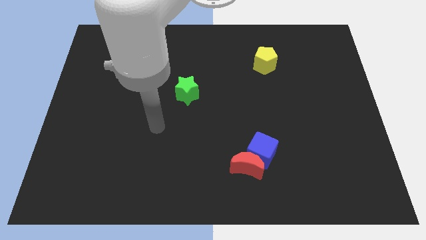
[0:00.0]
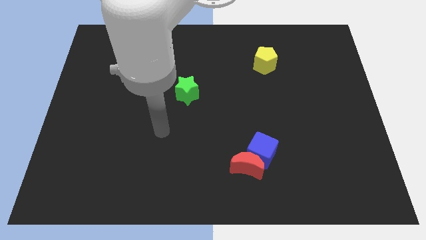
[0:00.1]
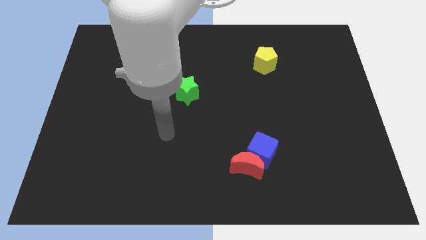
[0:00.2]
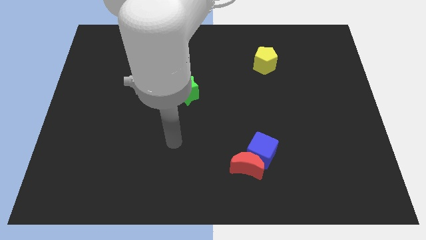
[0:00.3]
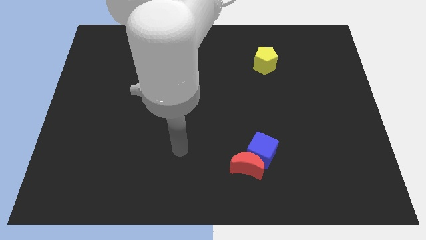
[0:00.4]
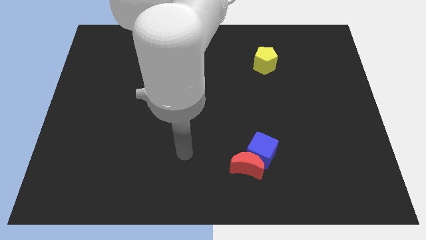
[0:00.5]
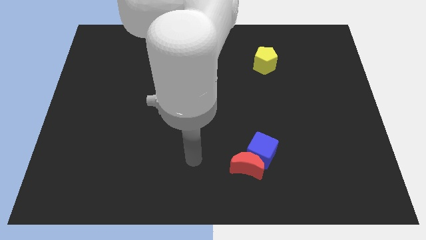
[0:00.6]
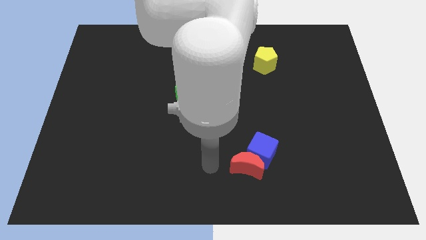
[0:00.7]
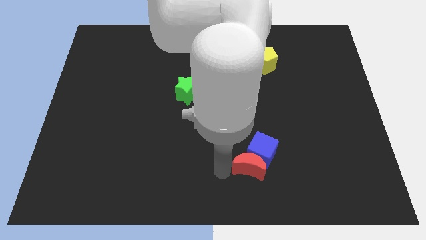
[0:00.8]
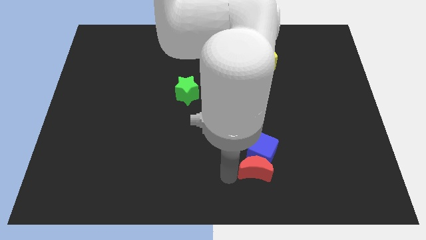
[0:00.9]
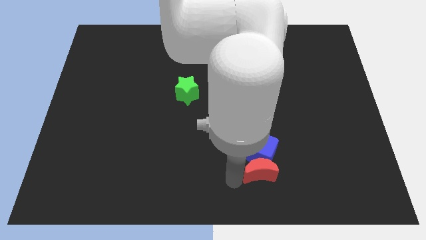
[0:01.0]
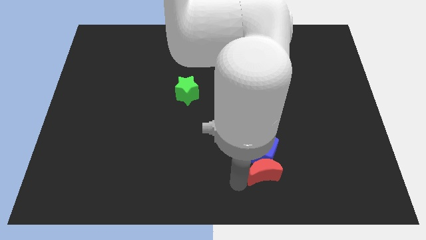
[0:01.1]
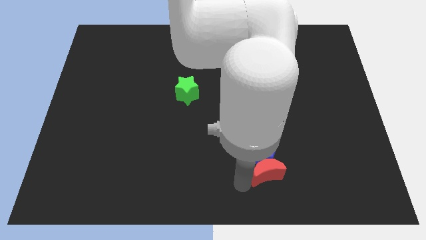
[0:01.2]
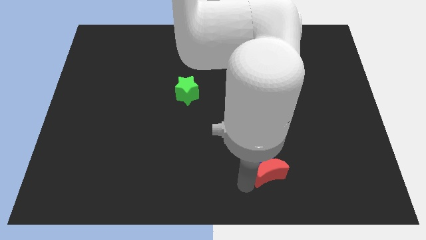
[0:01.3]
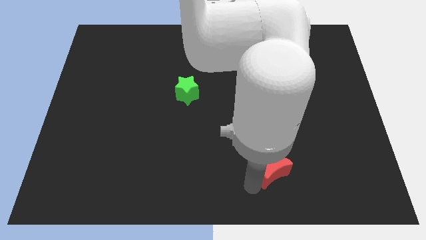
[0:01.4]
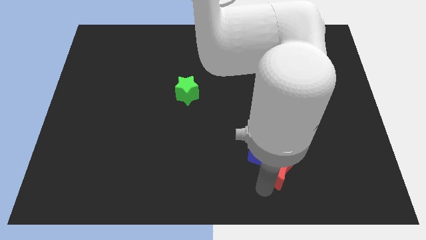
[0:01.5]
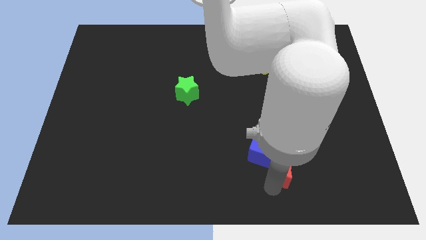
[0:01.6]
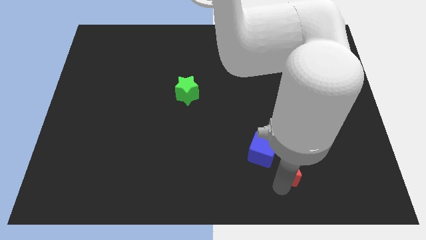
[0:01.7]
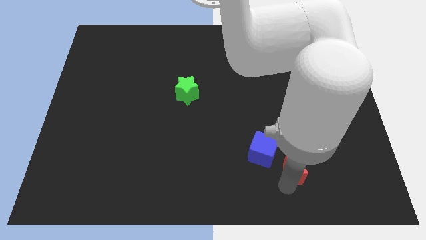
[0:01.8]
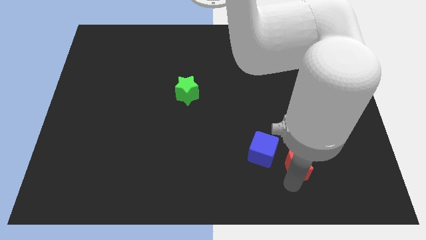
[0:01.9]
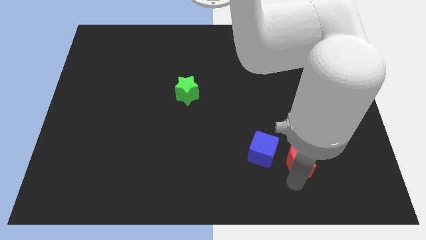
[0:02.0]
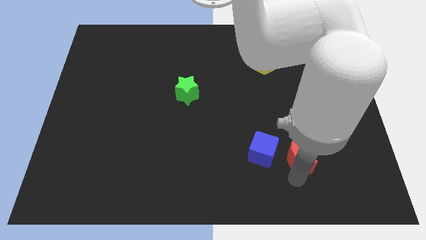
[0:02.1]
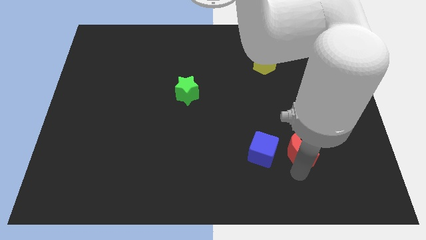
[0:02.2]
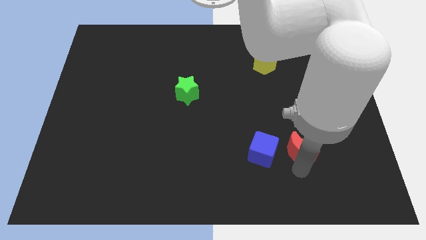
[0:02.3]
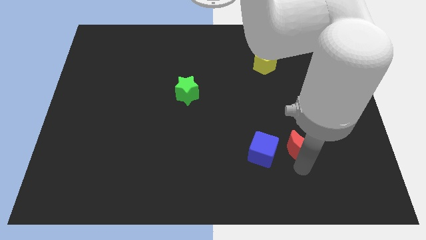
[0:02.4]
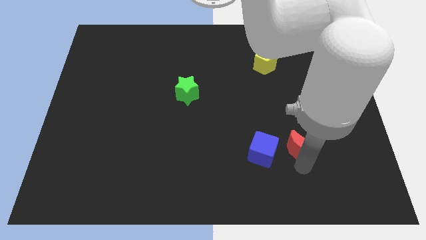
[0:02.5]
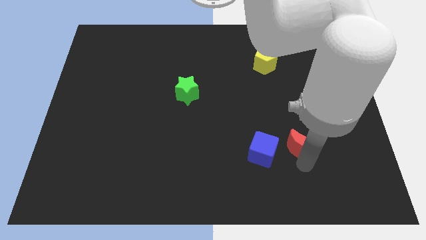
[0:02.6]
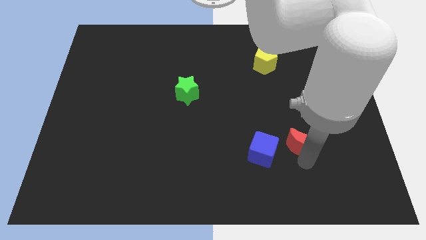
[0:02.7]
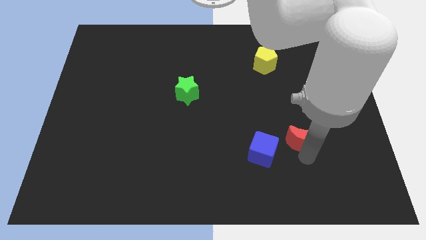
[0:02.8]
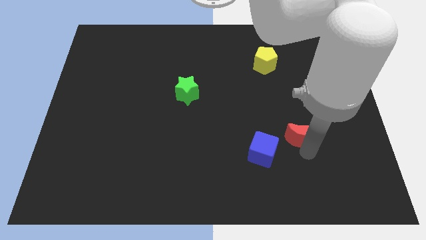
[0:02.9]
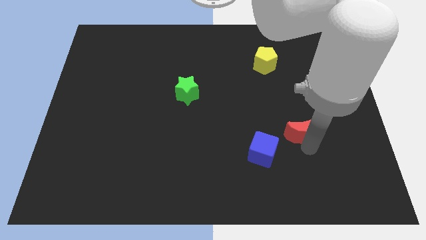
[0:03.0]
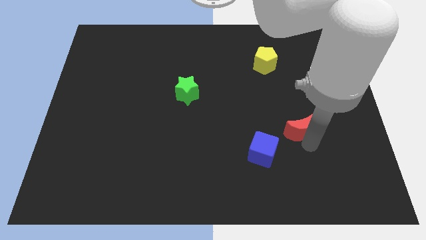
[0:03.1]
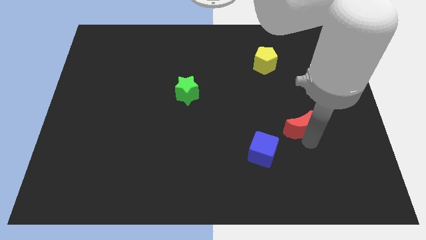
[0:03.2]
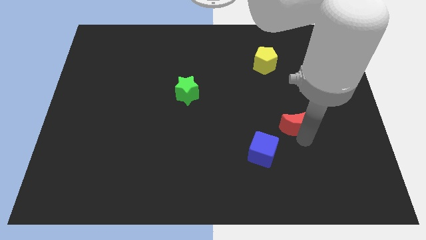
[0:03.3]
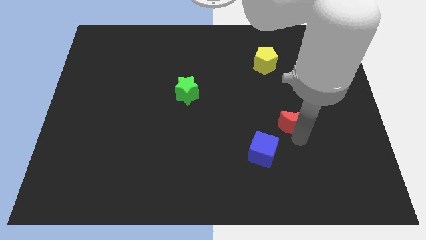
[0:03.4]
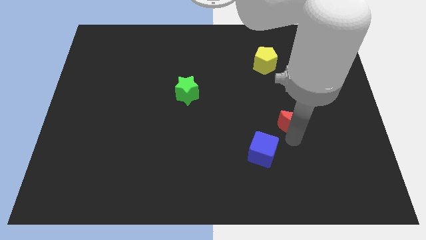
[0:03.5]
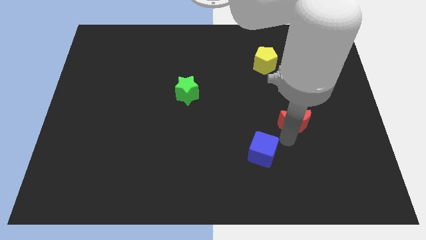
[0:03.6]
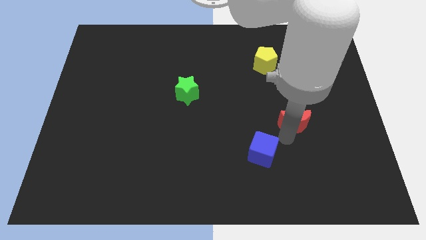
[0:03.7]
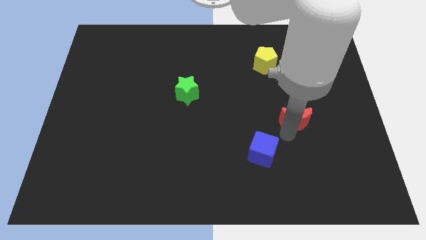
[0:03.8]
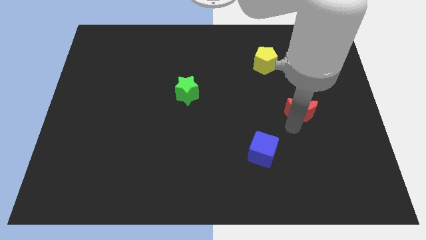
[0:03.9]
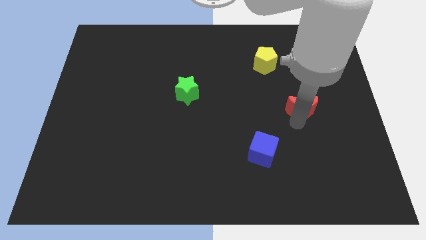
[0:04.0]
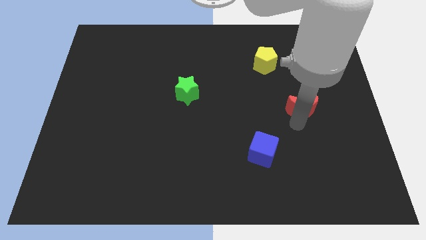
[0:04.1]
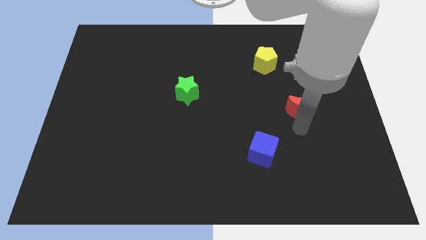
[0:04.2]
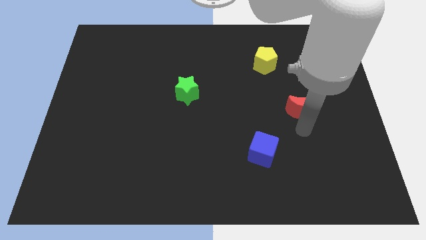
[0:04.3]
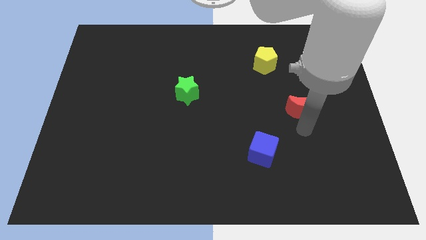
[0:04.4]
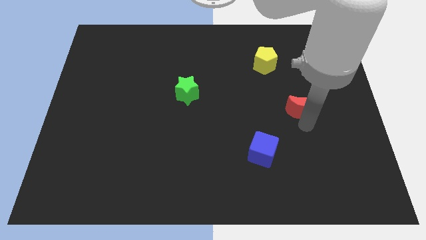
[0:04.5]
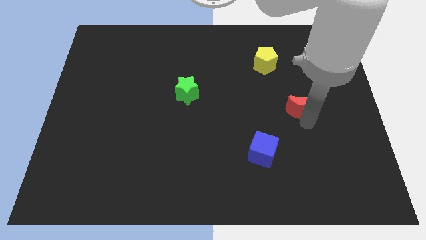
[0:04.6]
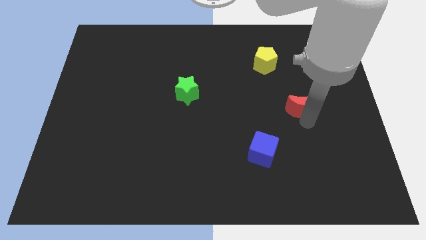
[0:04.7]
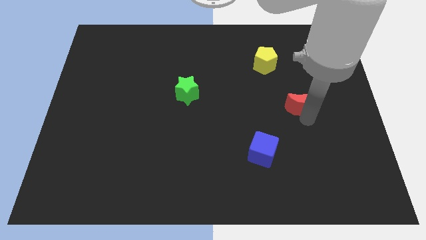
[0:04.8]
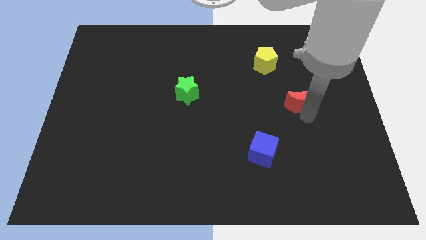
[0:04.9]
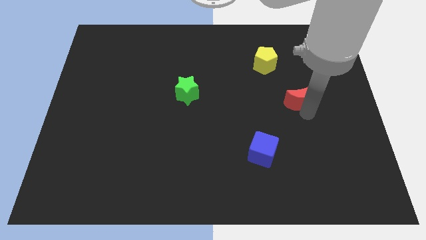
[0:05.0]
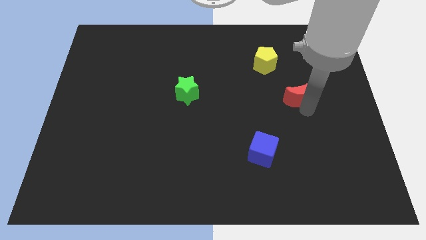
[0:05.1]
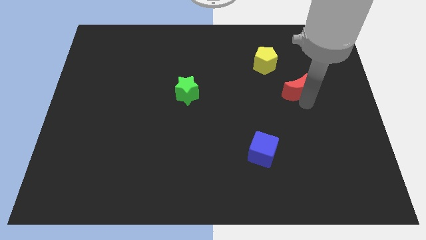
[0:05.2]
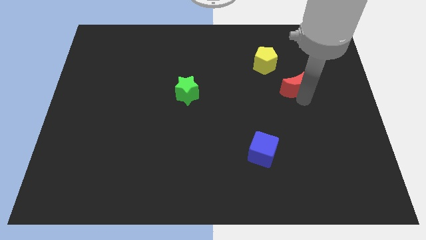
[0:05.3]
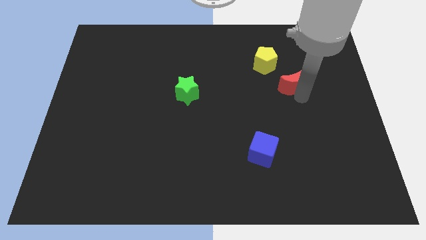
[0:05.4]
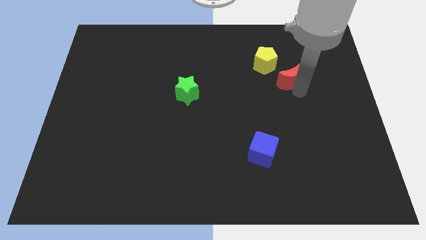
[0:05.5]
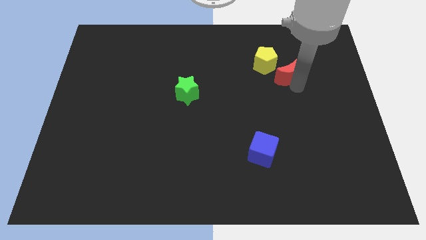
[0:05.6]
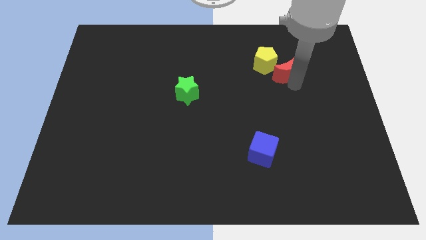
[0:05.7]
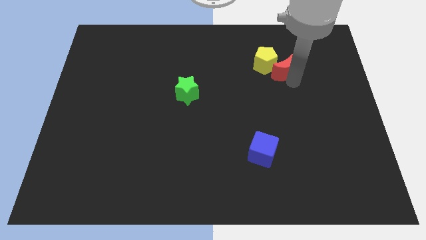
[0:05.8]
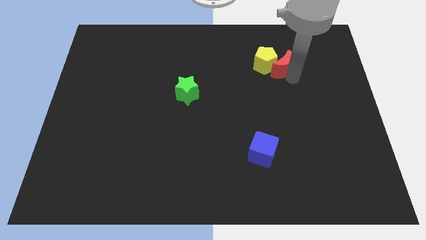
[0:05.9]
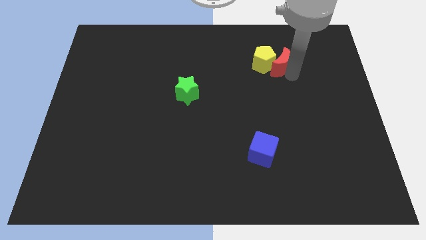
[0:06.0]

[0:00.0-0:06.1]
move the red block to the pentagon

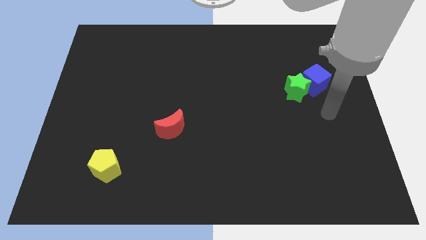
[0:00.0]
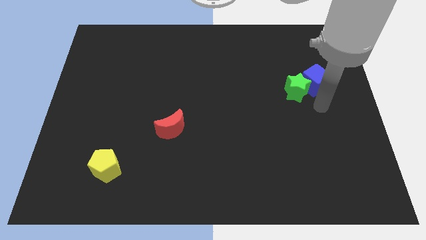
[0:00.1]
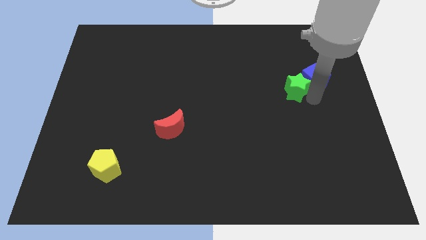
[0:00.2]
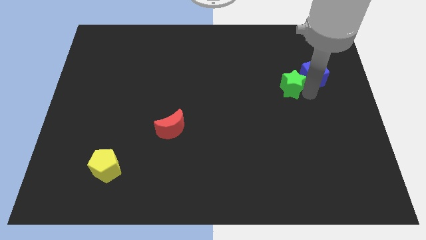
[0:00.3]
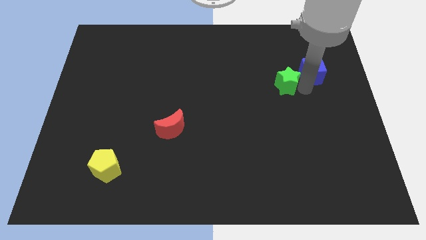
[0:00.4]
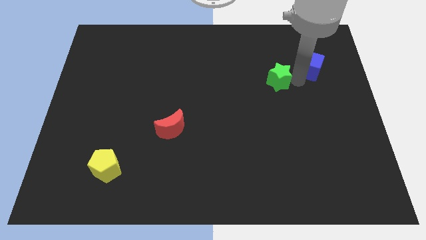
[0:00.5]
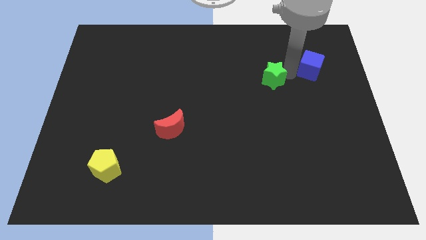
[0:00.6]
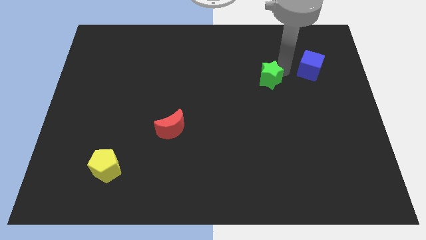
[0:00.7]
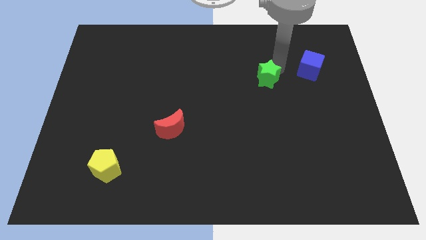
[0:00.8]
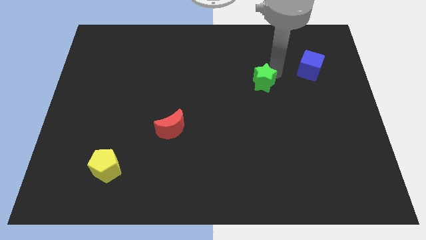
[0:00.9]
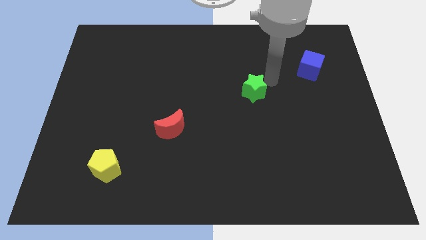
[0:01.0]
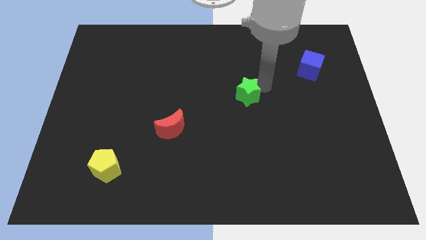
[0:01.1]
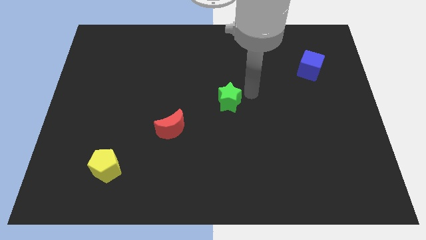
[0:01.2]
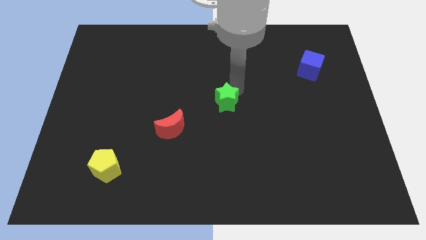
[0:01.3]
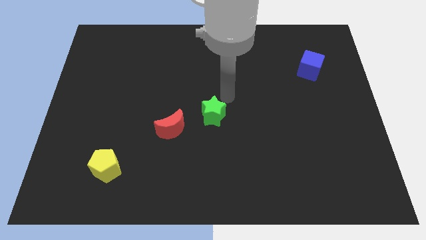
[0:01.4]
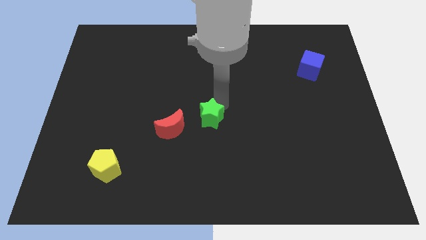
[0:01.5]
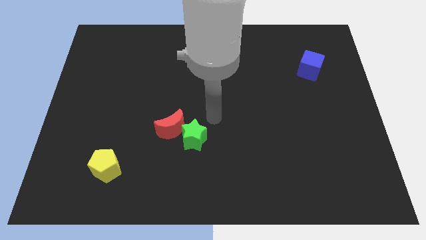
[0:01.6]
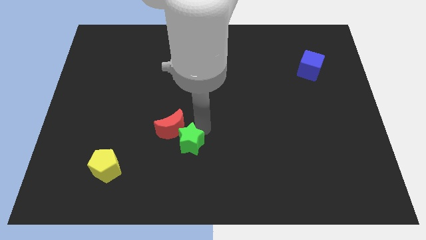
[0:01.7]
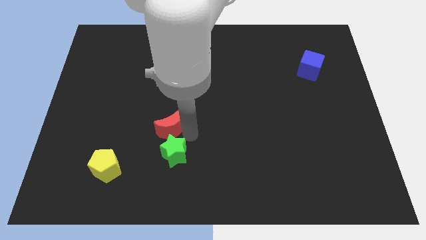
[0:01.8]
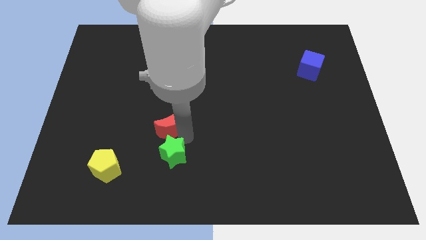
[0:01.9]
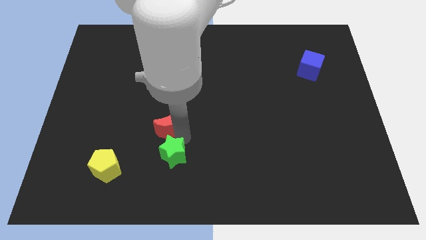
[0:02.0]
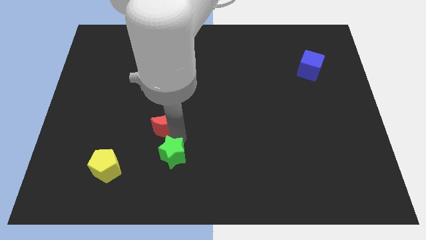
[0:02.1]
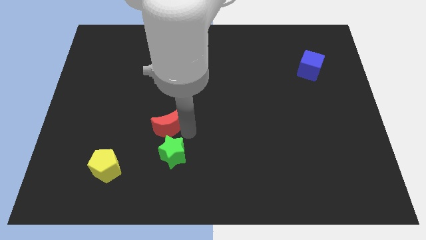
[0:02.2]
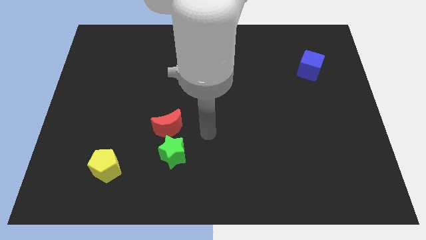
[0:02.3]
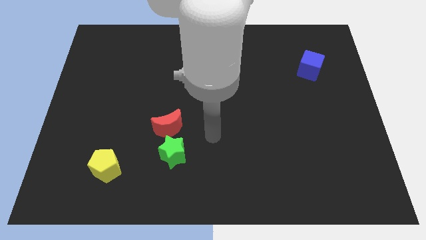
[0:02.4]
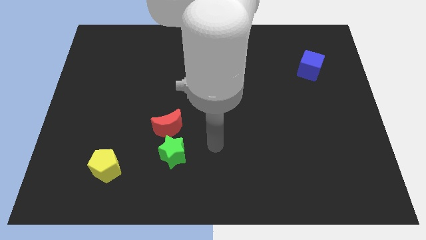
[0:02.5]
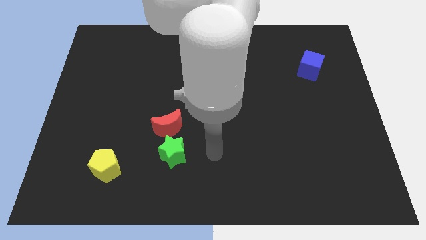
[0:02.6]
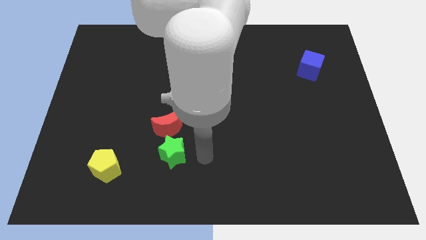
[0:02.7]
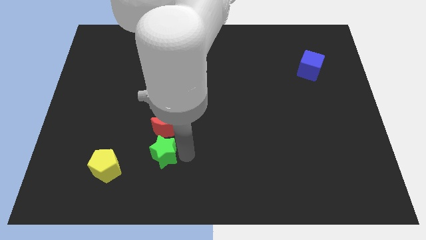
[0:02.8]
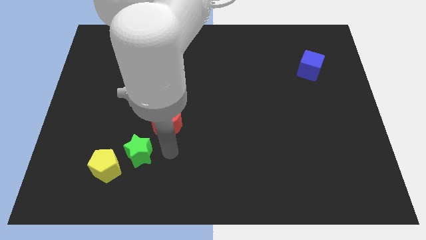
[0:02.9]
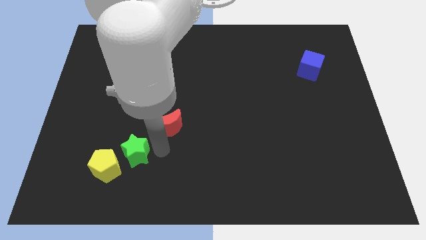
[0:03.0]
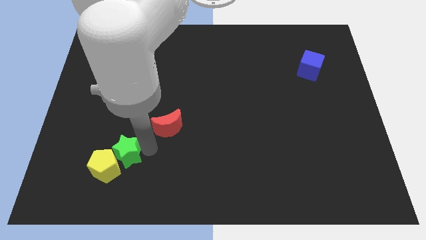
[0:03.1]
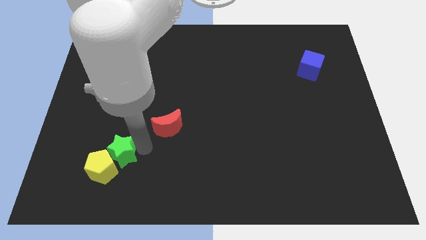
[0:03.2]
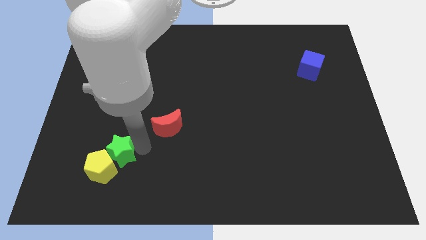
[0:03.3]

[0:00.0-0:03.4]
move the green star to the yellow block
